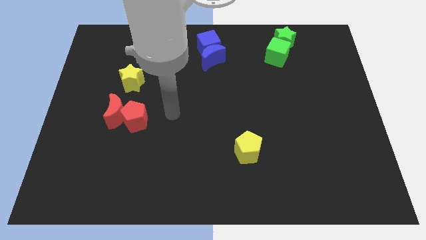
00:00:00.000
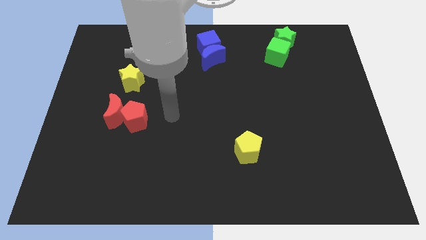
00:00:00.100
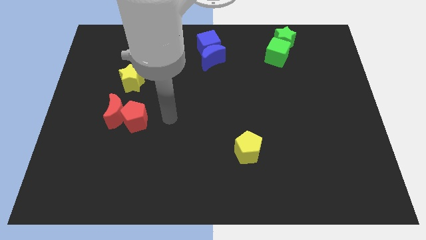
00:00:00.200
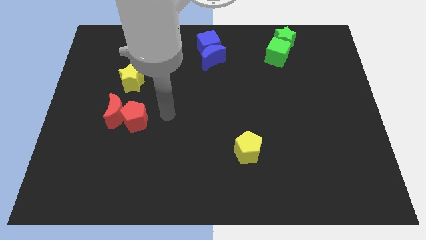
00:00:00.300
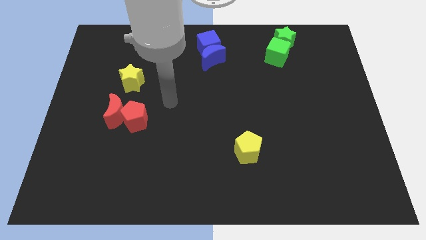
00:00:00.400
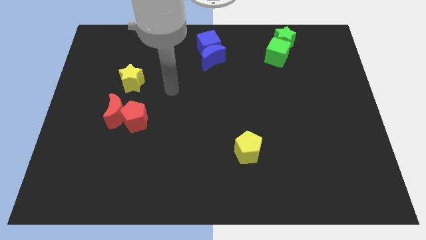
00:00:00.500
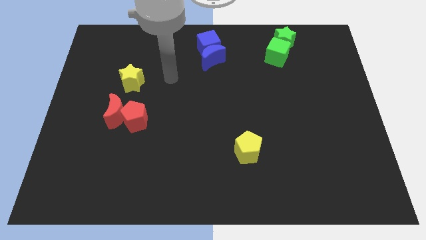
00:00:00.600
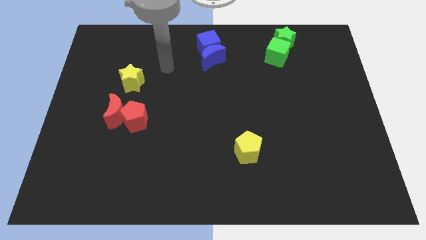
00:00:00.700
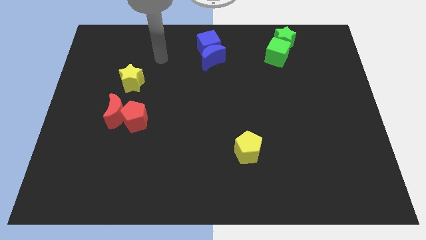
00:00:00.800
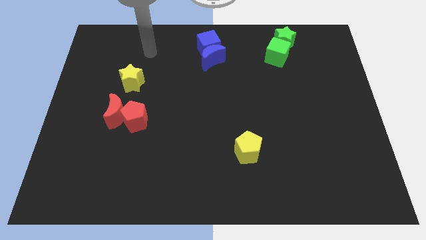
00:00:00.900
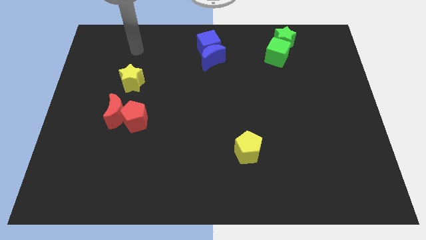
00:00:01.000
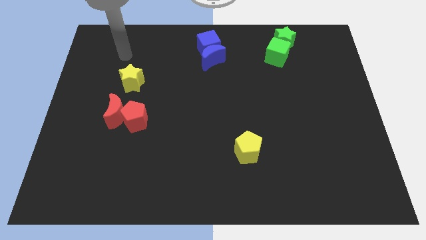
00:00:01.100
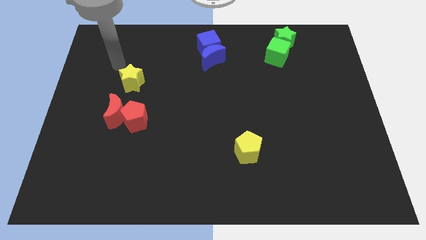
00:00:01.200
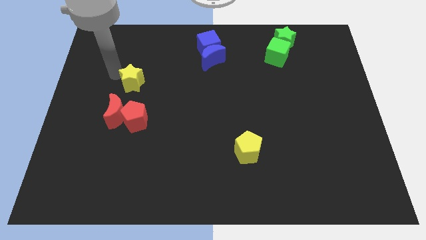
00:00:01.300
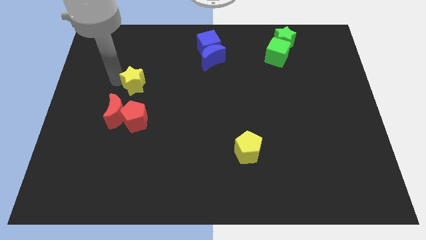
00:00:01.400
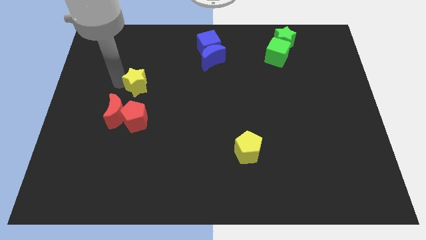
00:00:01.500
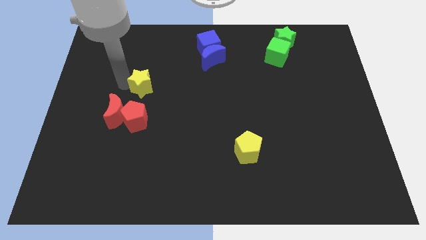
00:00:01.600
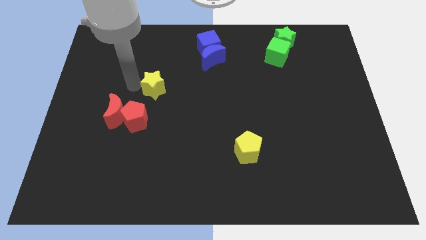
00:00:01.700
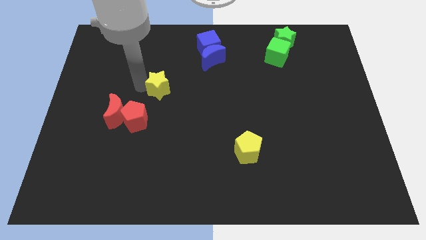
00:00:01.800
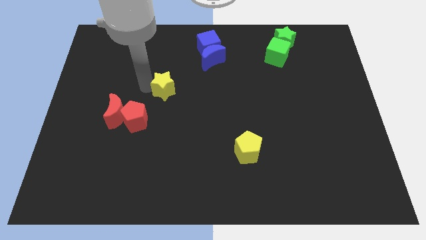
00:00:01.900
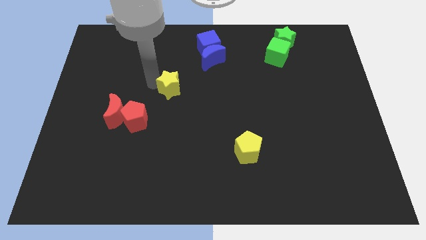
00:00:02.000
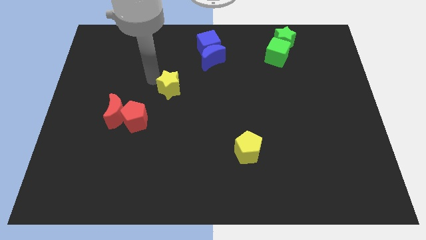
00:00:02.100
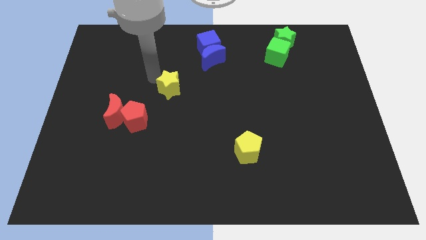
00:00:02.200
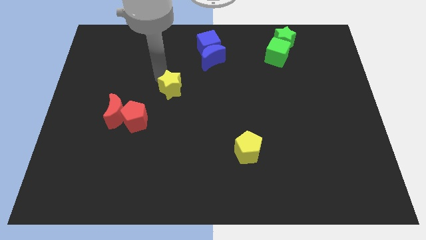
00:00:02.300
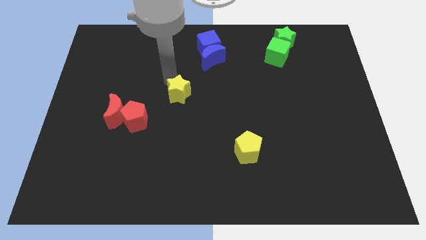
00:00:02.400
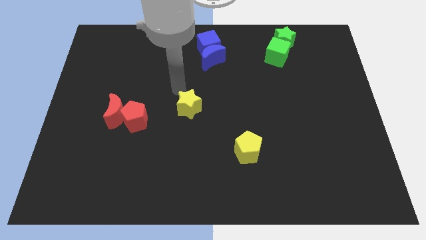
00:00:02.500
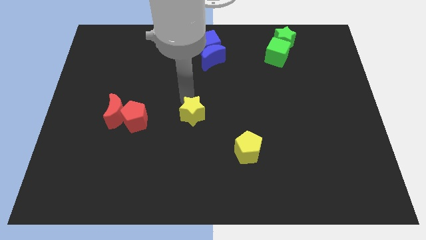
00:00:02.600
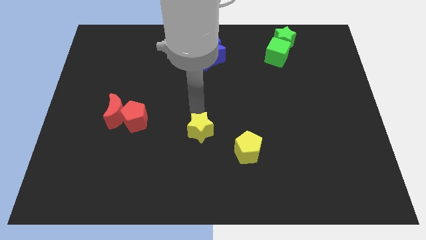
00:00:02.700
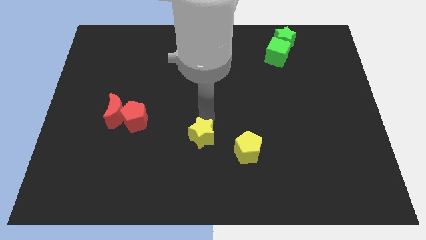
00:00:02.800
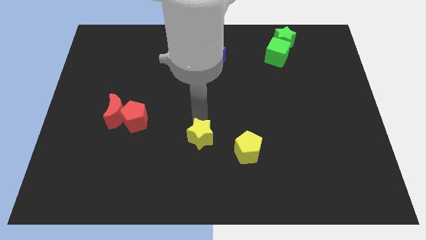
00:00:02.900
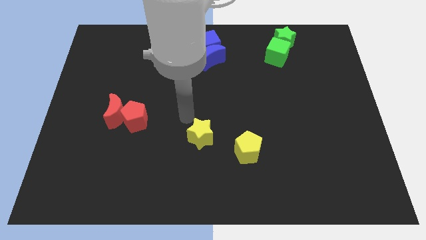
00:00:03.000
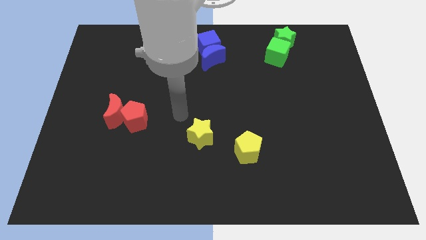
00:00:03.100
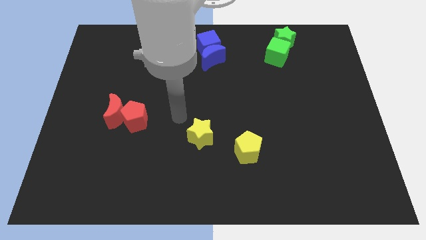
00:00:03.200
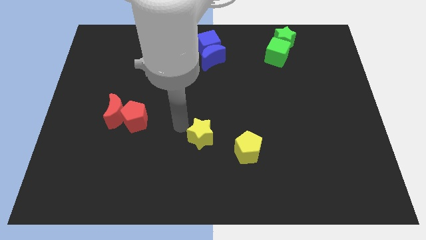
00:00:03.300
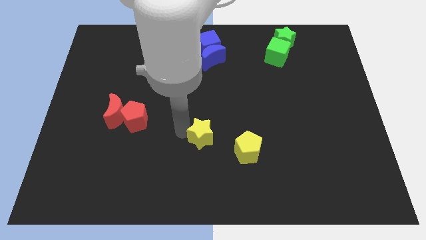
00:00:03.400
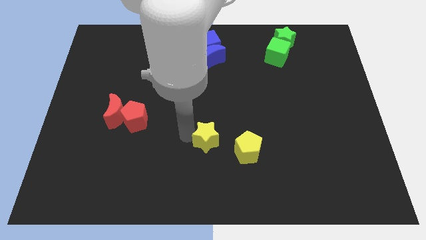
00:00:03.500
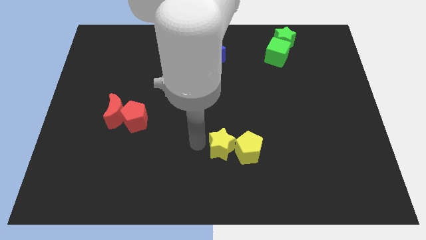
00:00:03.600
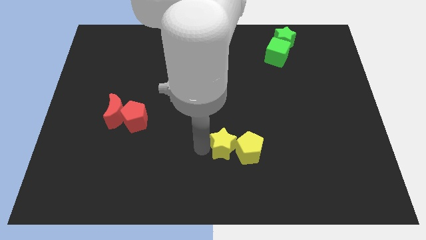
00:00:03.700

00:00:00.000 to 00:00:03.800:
push the yellow star to the left side of the yellow pentagon

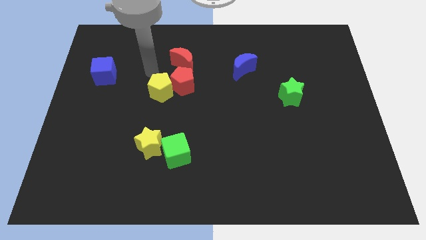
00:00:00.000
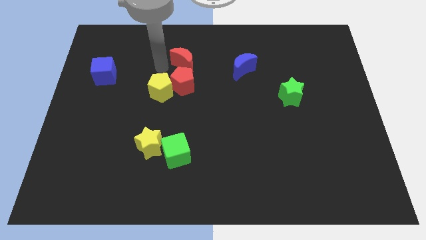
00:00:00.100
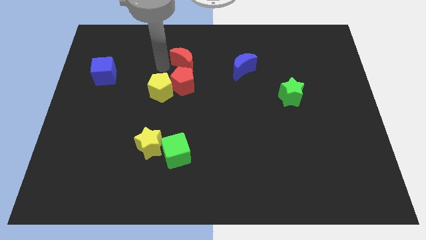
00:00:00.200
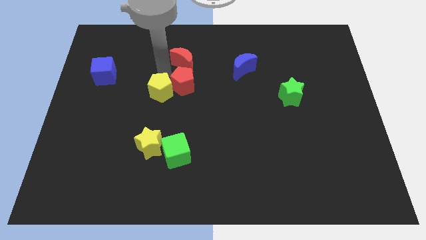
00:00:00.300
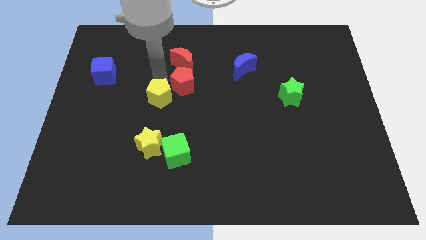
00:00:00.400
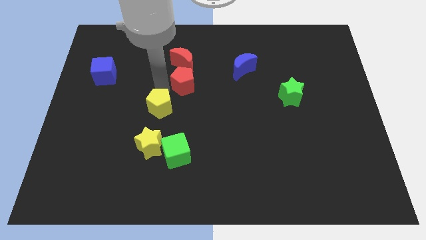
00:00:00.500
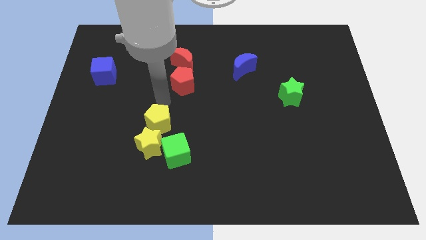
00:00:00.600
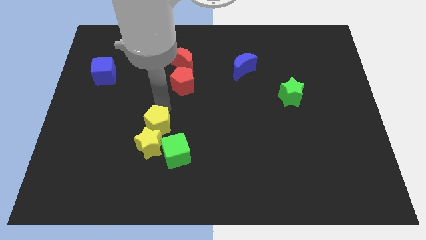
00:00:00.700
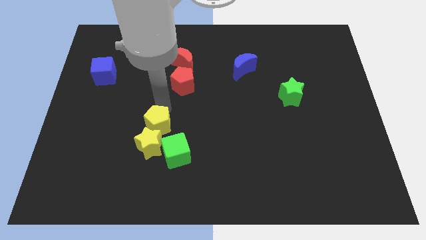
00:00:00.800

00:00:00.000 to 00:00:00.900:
move the yellow pentagon close to the yellow star

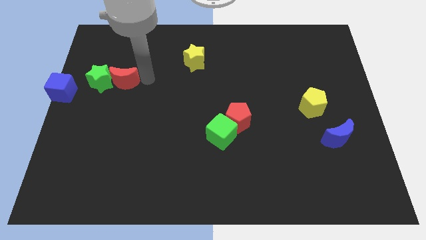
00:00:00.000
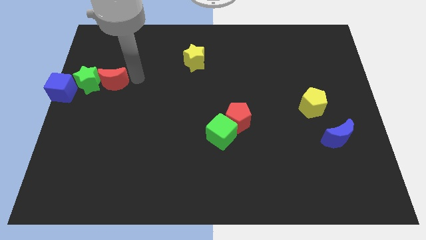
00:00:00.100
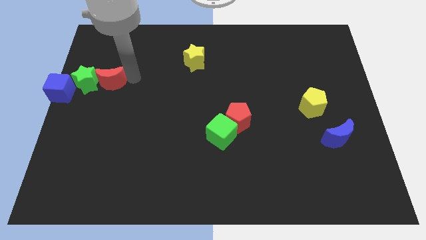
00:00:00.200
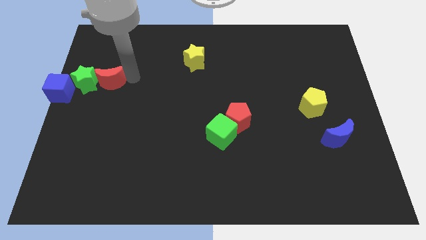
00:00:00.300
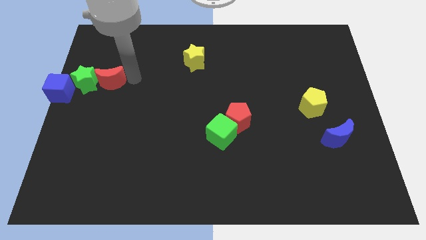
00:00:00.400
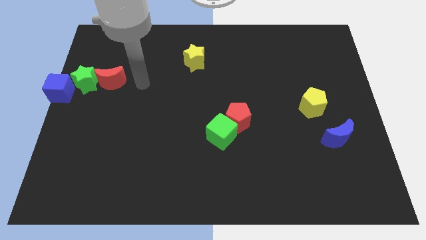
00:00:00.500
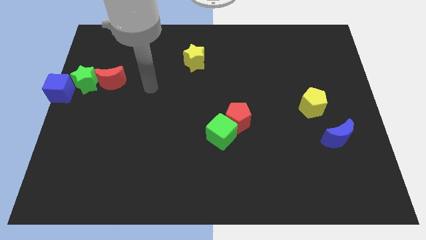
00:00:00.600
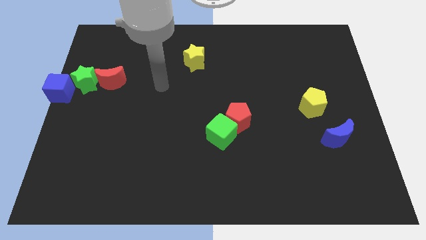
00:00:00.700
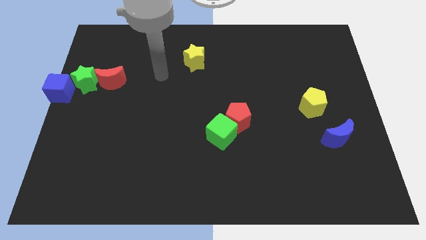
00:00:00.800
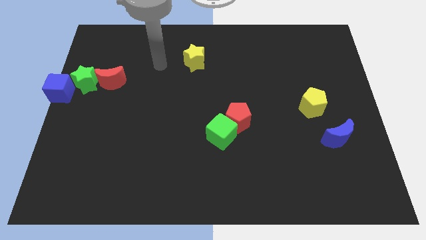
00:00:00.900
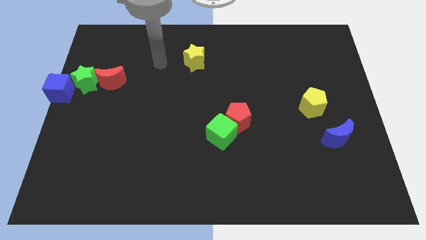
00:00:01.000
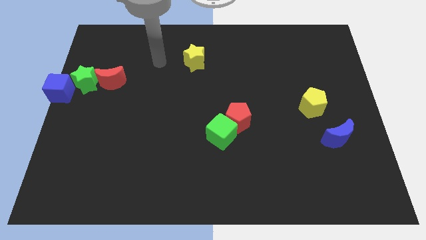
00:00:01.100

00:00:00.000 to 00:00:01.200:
move red crescent along with green star to the left side of the board

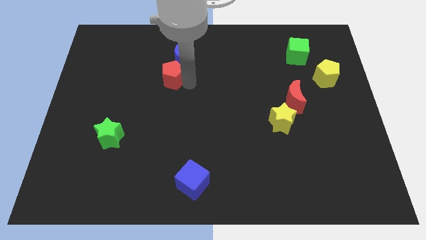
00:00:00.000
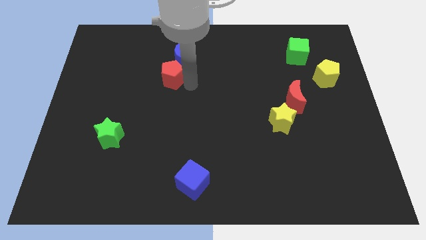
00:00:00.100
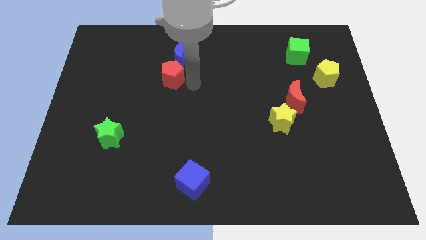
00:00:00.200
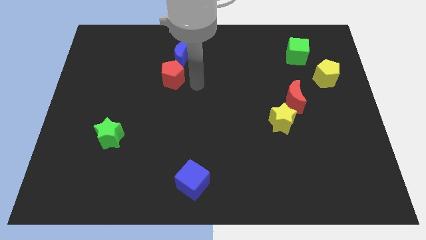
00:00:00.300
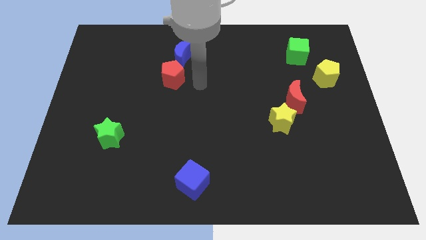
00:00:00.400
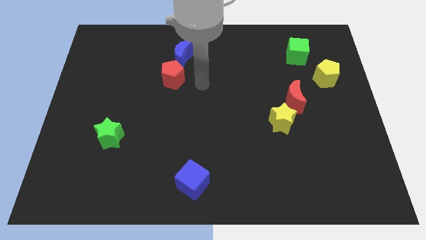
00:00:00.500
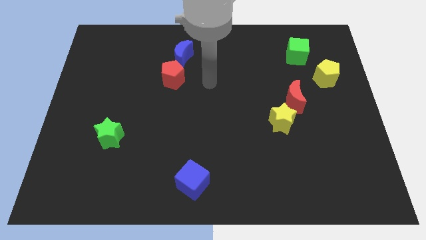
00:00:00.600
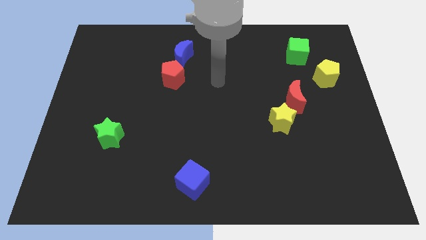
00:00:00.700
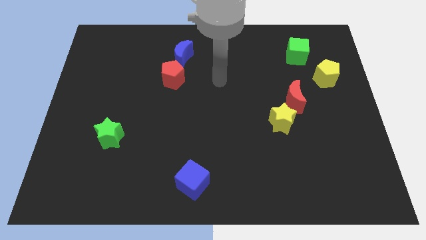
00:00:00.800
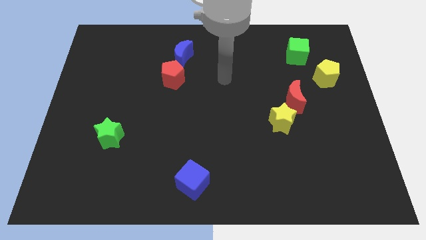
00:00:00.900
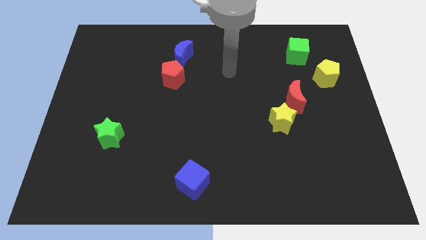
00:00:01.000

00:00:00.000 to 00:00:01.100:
move red pentagon below blue moon

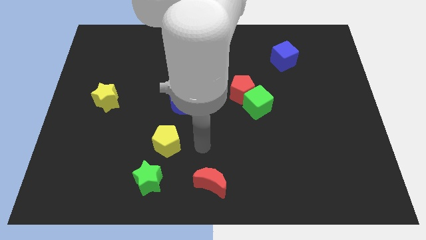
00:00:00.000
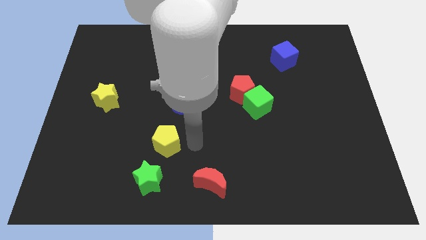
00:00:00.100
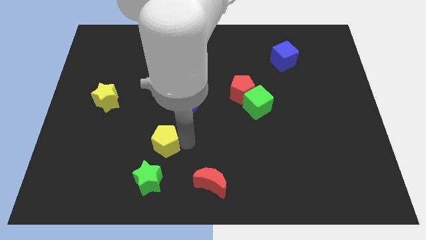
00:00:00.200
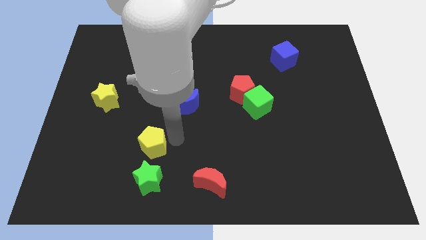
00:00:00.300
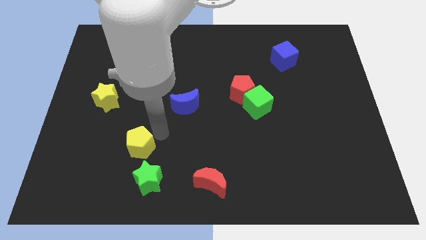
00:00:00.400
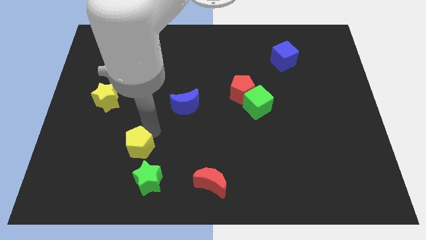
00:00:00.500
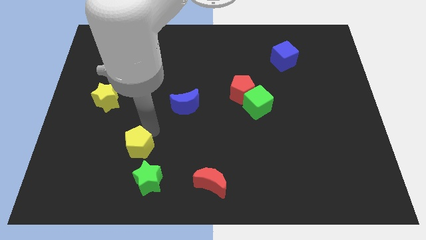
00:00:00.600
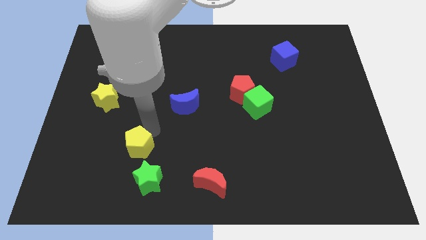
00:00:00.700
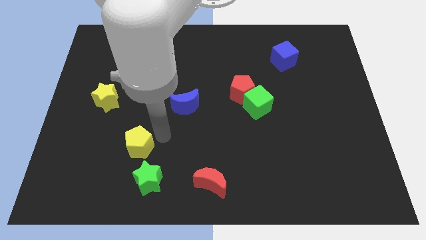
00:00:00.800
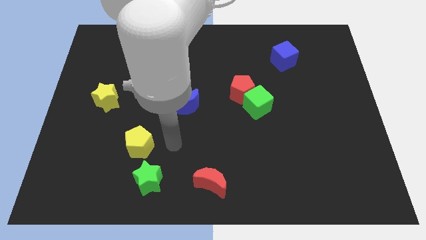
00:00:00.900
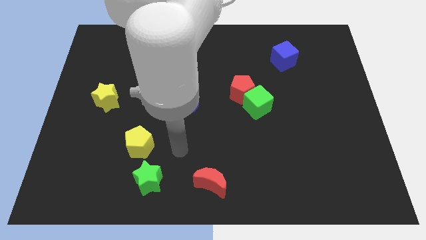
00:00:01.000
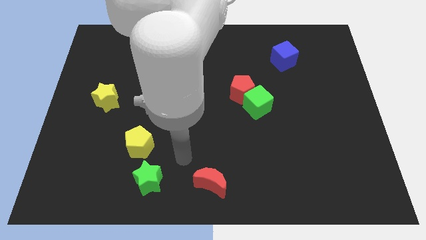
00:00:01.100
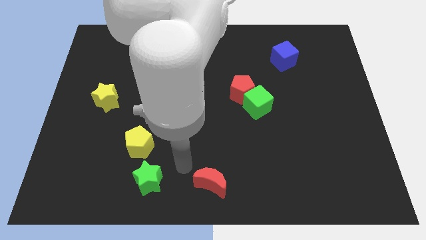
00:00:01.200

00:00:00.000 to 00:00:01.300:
slide the yellow pentagon diagonally bottom left to the blue moon

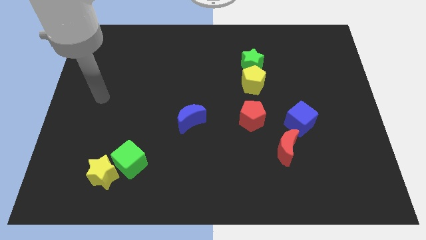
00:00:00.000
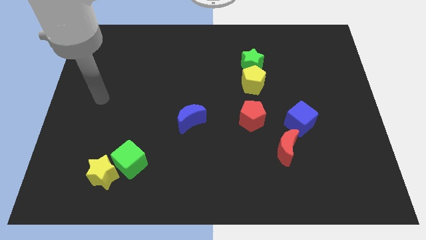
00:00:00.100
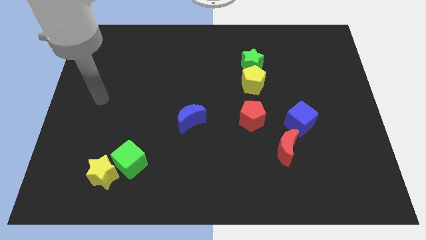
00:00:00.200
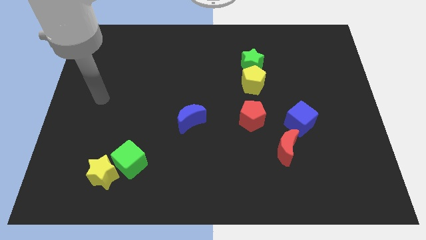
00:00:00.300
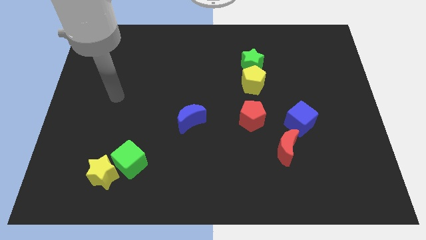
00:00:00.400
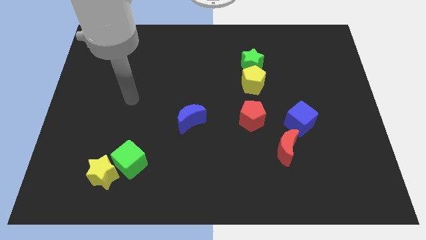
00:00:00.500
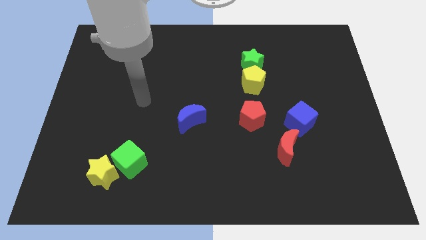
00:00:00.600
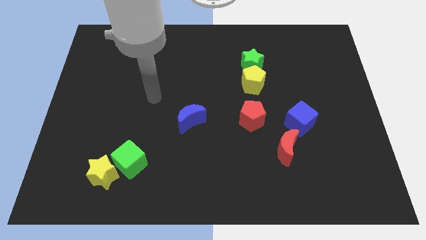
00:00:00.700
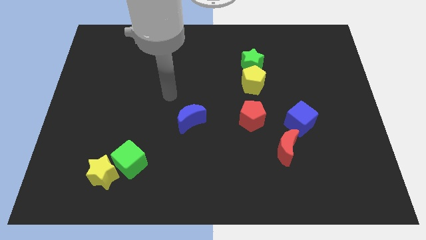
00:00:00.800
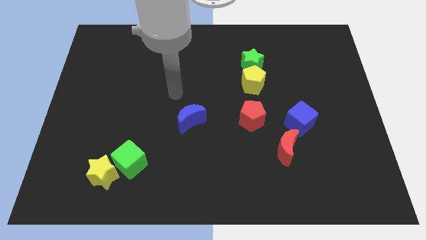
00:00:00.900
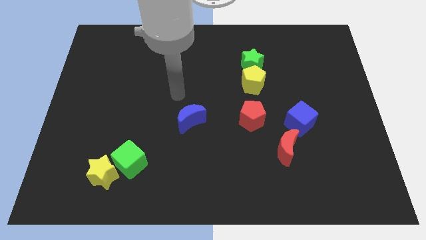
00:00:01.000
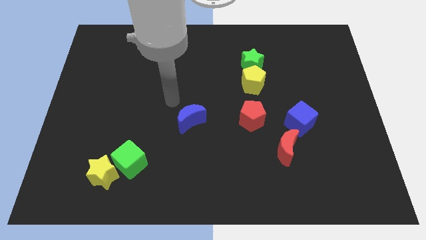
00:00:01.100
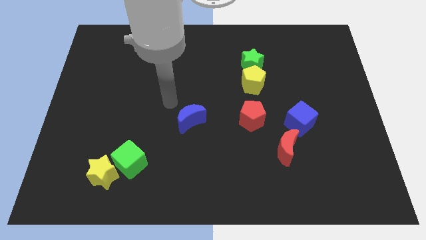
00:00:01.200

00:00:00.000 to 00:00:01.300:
move your arm close to the blue semicircle
